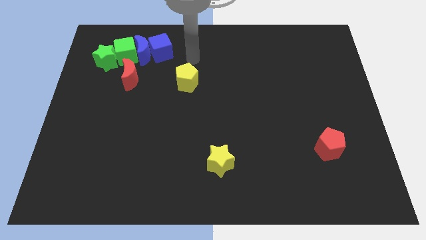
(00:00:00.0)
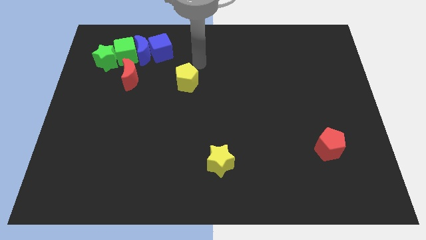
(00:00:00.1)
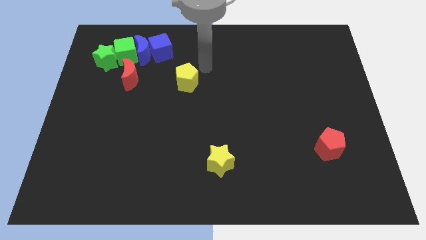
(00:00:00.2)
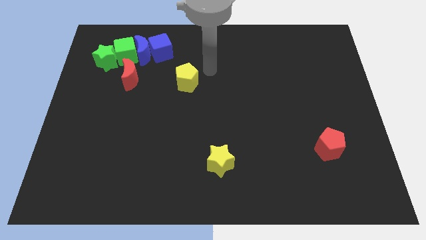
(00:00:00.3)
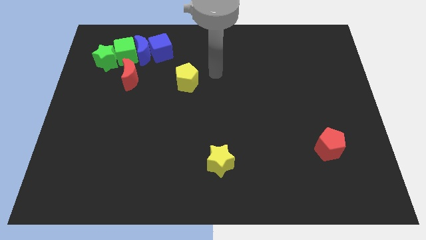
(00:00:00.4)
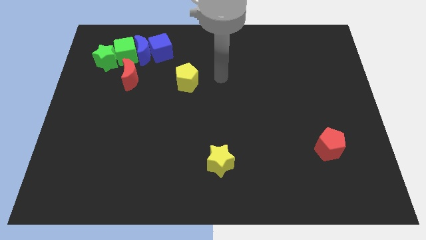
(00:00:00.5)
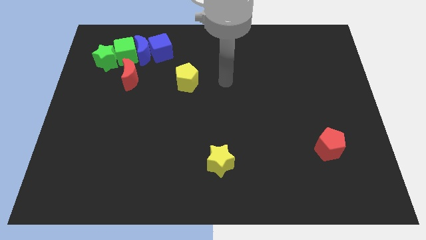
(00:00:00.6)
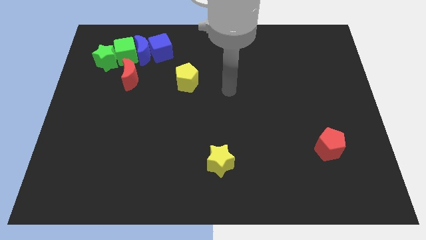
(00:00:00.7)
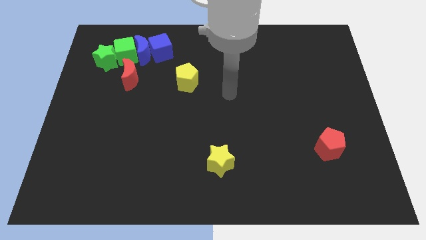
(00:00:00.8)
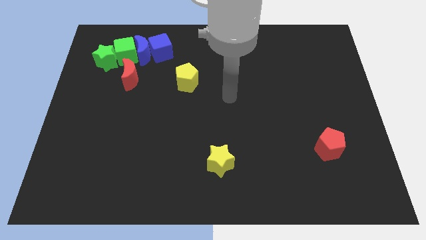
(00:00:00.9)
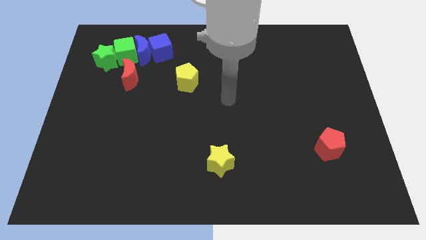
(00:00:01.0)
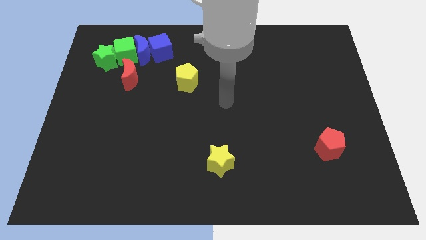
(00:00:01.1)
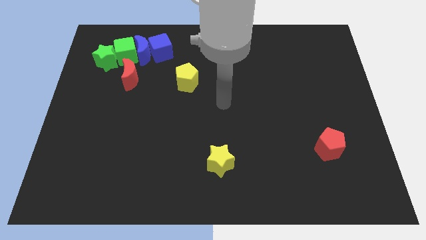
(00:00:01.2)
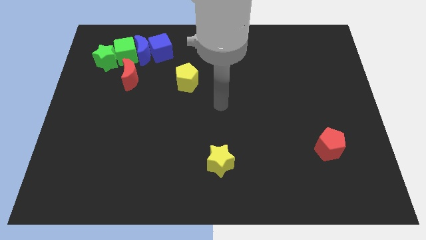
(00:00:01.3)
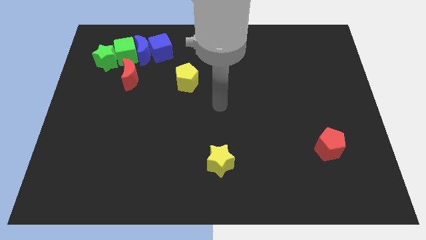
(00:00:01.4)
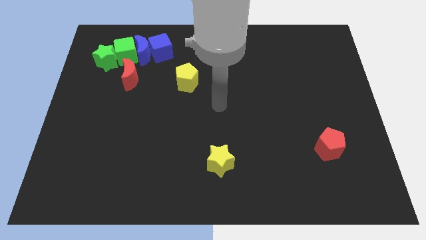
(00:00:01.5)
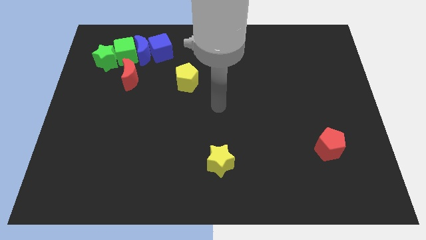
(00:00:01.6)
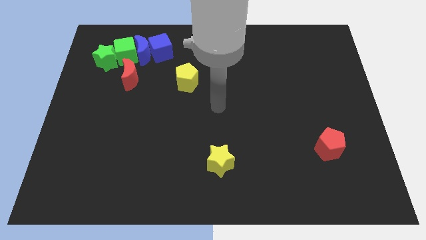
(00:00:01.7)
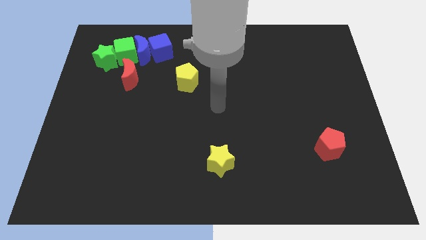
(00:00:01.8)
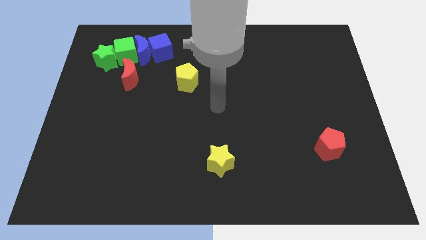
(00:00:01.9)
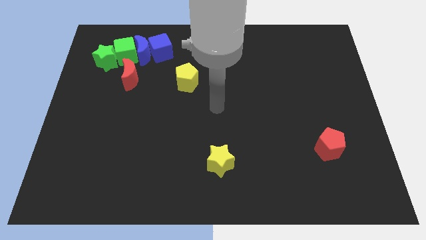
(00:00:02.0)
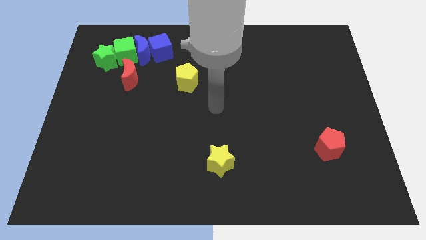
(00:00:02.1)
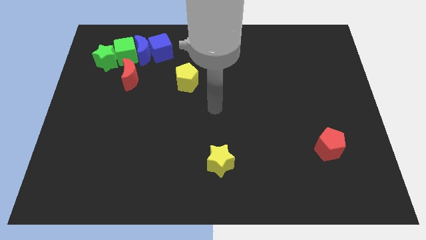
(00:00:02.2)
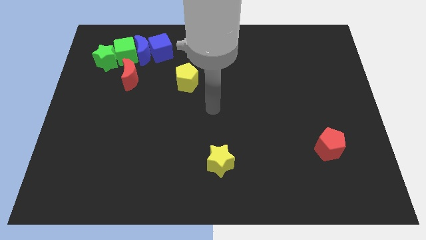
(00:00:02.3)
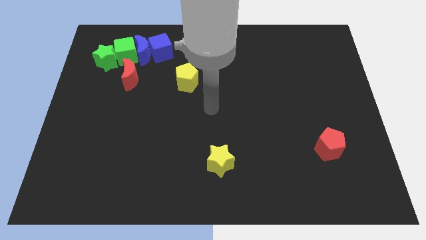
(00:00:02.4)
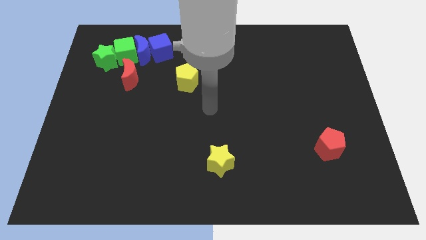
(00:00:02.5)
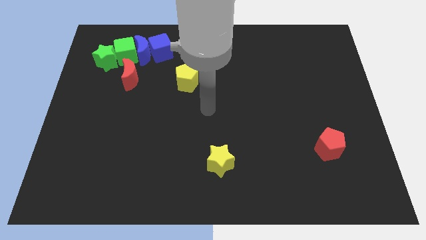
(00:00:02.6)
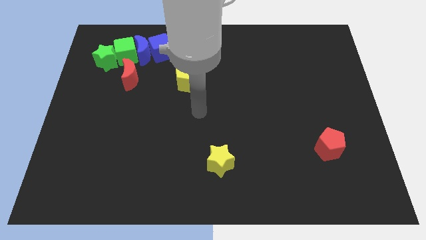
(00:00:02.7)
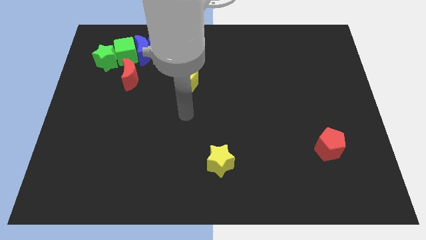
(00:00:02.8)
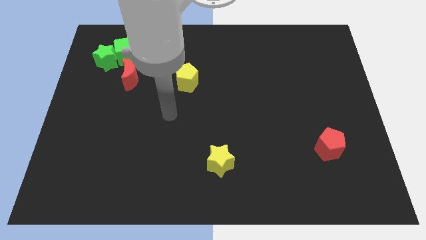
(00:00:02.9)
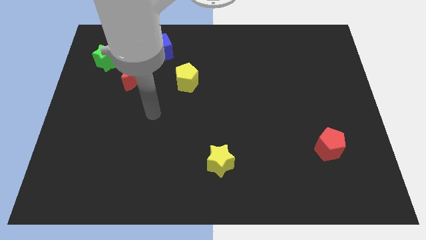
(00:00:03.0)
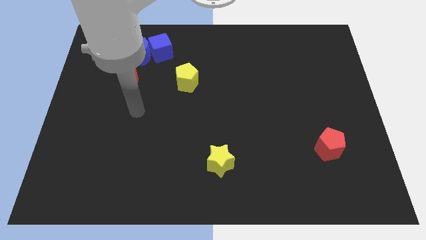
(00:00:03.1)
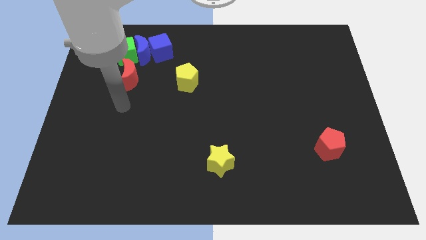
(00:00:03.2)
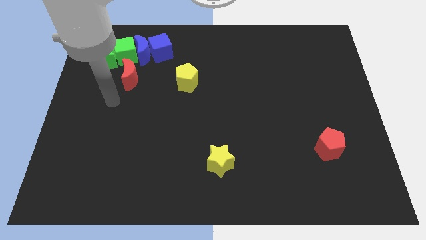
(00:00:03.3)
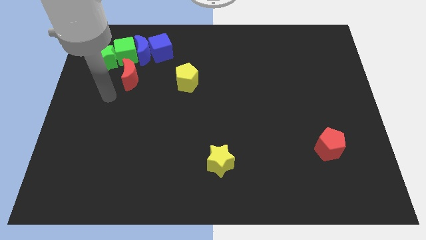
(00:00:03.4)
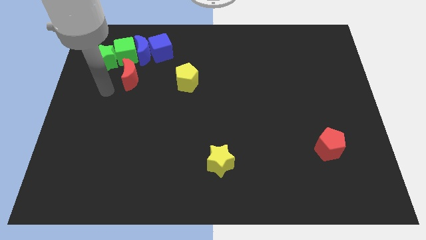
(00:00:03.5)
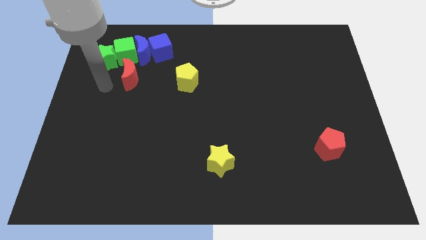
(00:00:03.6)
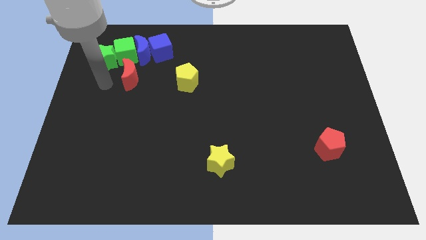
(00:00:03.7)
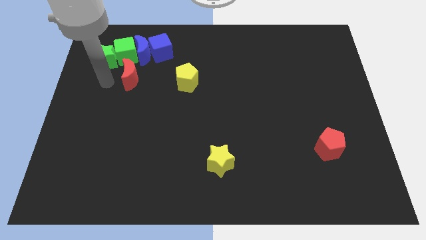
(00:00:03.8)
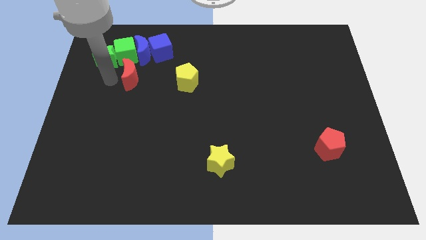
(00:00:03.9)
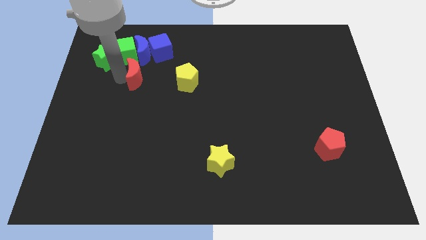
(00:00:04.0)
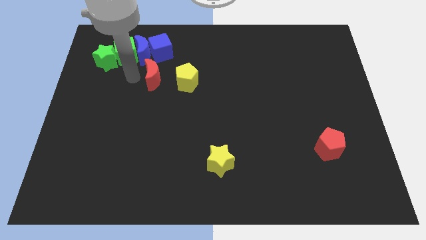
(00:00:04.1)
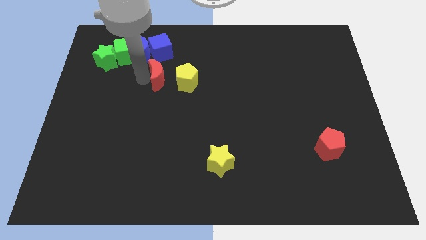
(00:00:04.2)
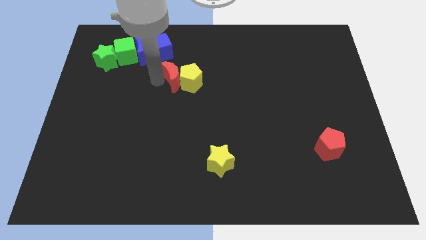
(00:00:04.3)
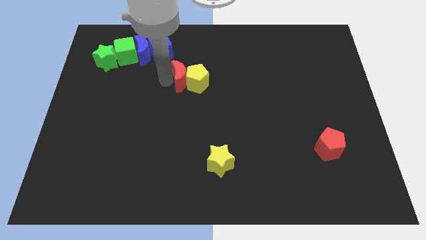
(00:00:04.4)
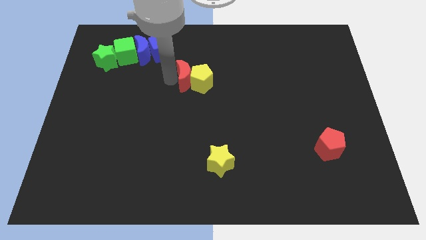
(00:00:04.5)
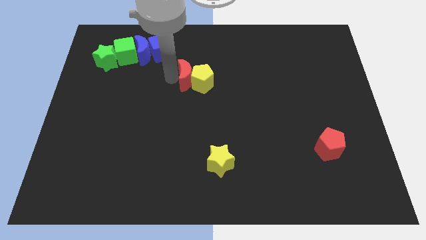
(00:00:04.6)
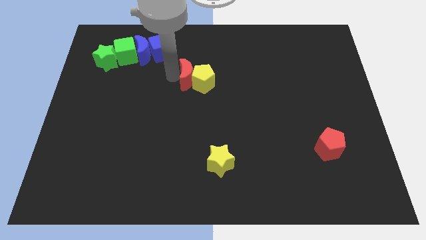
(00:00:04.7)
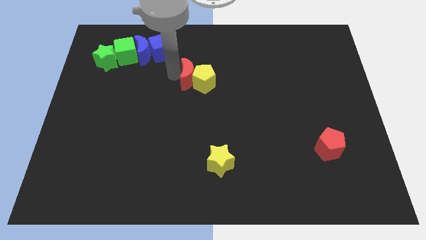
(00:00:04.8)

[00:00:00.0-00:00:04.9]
push the red crescent into the yellow pentagon

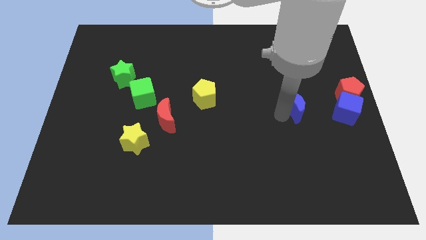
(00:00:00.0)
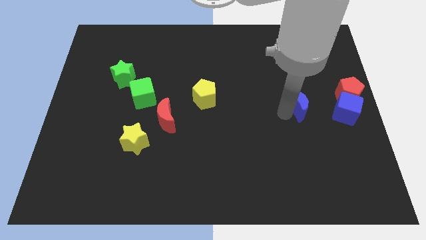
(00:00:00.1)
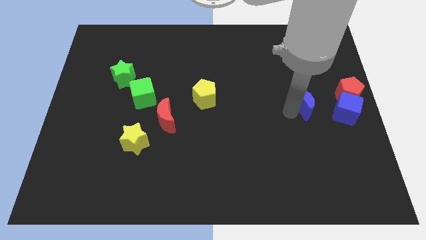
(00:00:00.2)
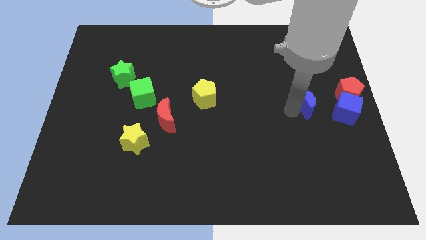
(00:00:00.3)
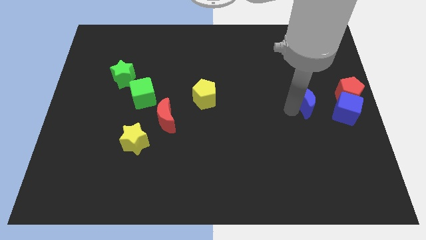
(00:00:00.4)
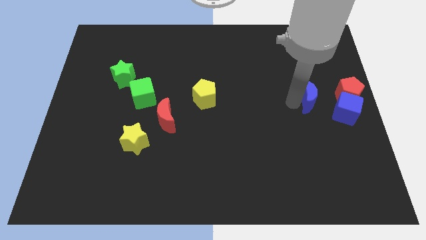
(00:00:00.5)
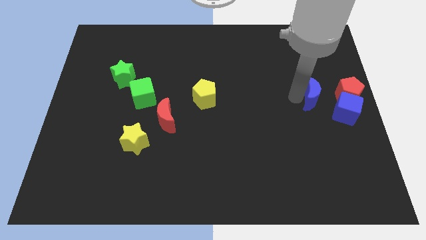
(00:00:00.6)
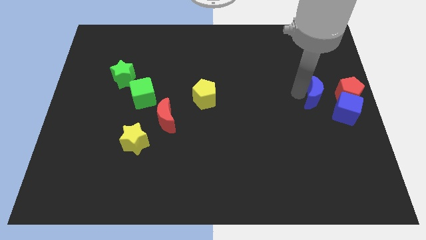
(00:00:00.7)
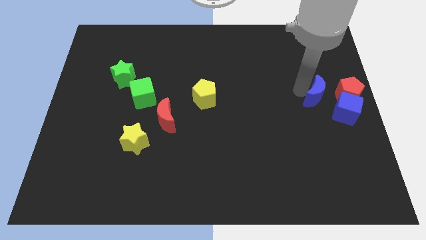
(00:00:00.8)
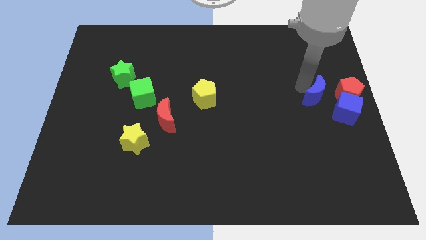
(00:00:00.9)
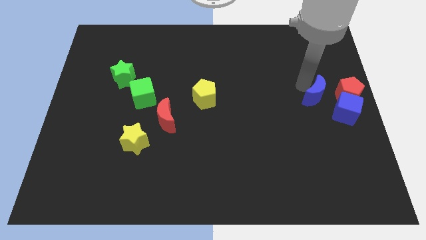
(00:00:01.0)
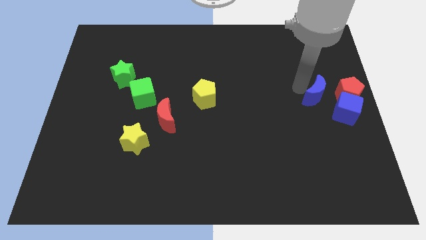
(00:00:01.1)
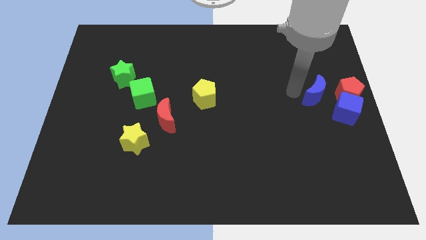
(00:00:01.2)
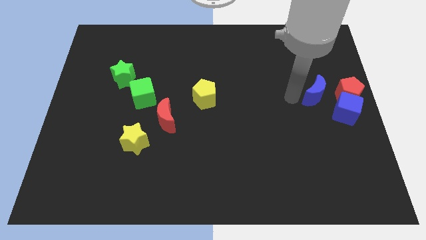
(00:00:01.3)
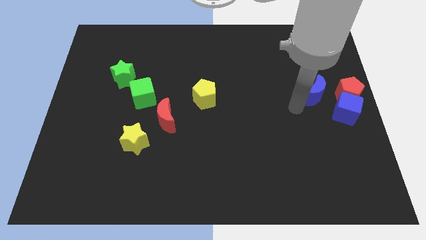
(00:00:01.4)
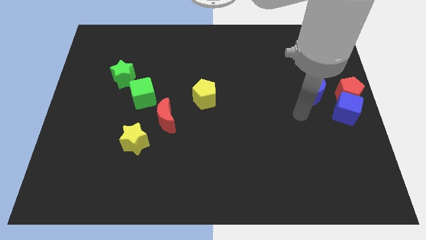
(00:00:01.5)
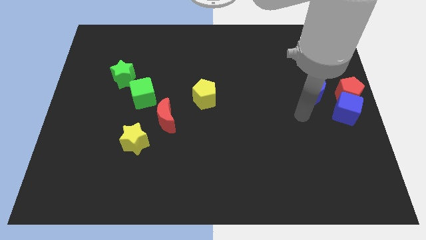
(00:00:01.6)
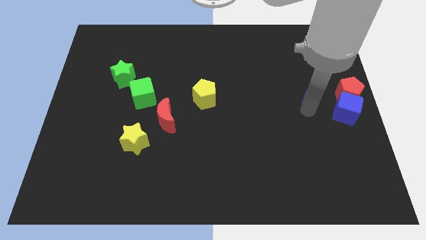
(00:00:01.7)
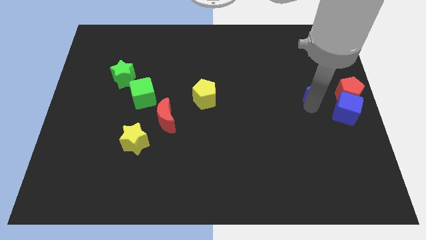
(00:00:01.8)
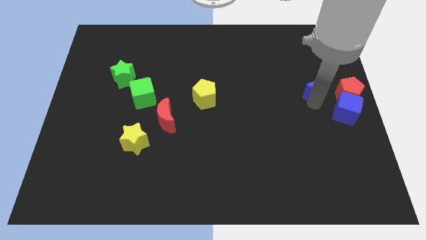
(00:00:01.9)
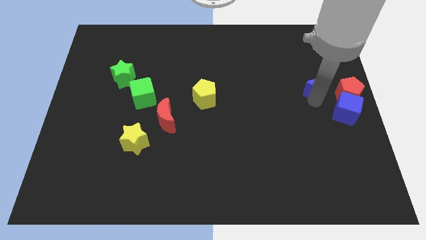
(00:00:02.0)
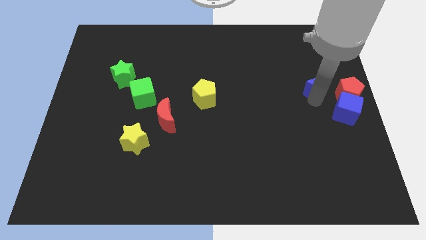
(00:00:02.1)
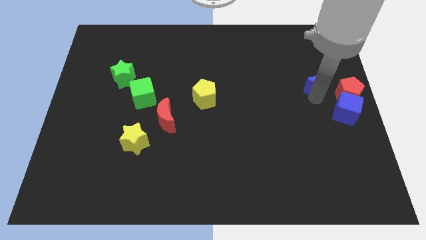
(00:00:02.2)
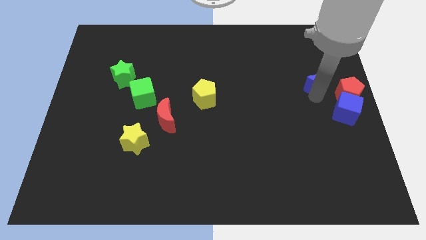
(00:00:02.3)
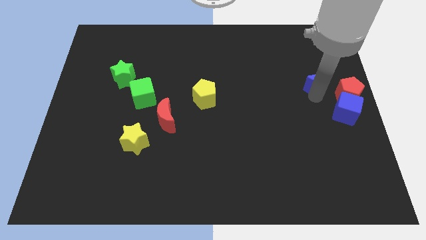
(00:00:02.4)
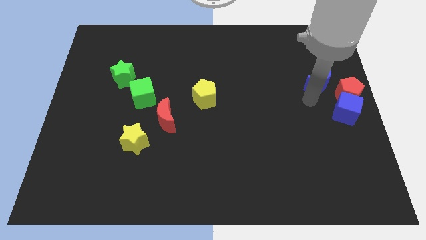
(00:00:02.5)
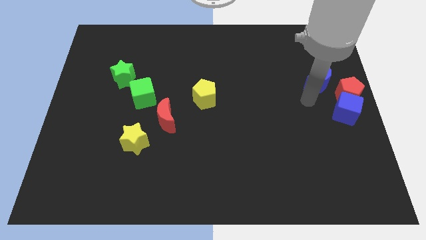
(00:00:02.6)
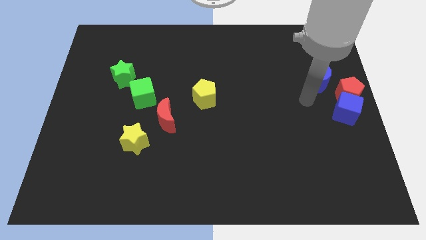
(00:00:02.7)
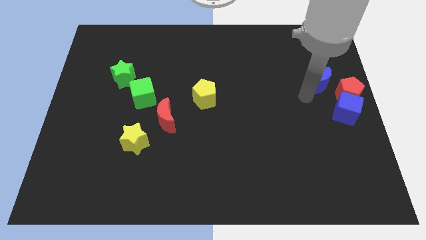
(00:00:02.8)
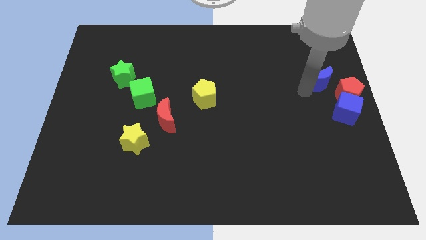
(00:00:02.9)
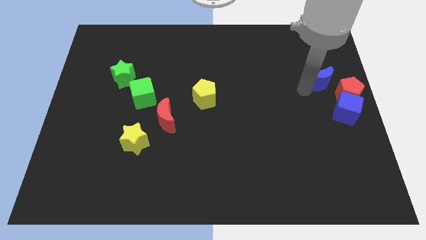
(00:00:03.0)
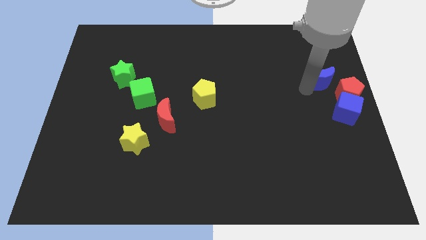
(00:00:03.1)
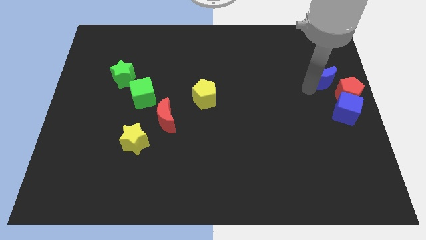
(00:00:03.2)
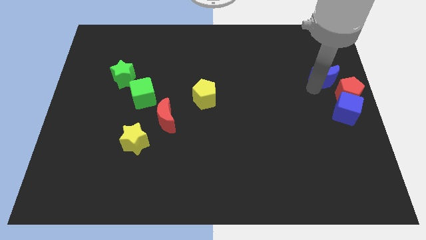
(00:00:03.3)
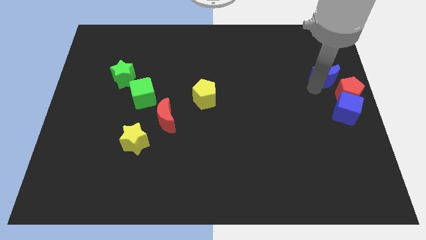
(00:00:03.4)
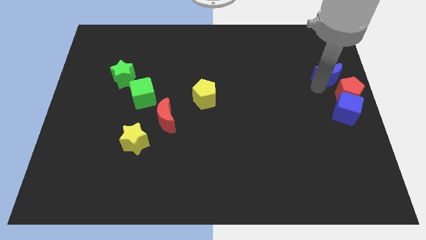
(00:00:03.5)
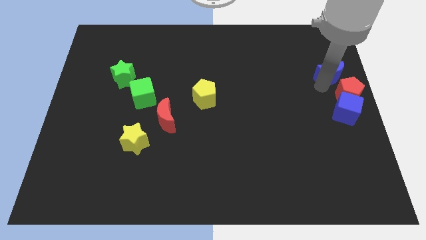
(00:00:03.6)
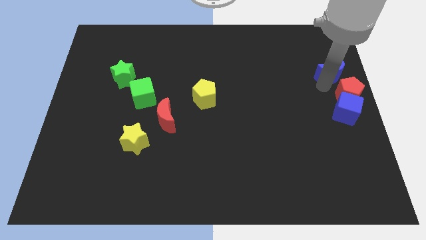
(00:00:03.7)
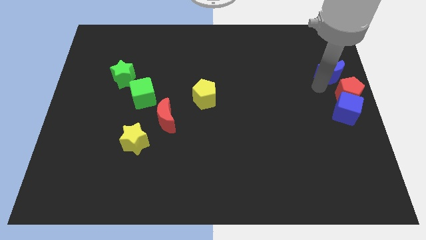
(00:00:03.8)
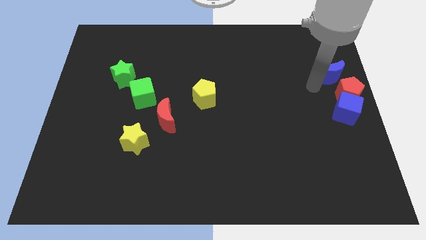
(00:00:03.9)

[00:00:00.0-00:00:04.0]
slide the blue crescent above the red pentagon

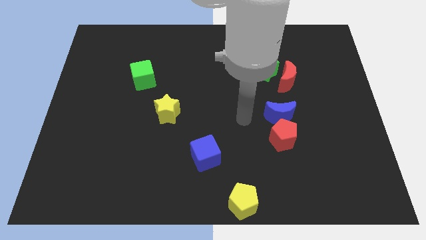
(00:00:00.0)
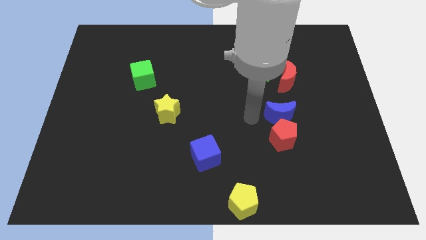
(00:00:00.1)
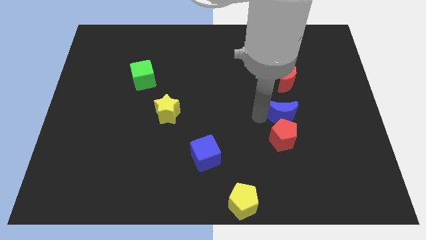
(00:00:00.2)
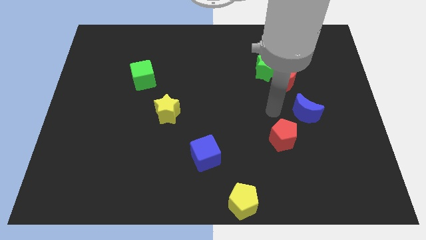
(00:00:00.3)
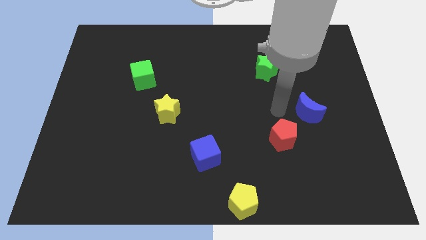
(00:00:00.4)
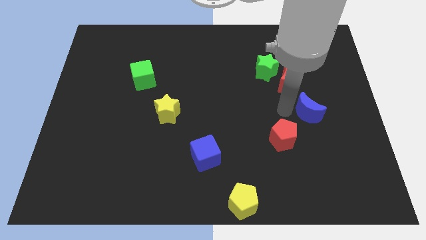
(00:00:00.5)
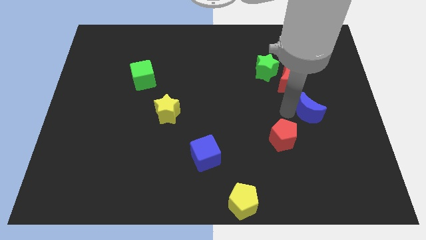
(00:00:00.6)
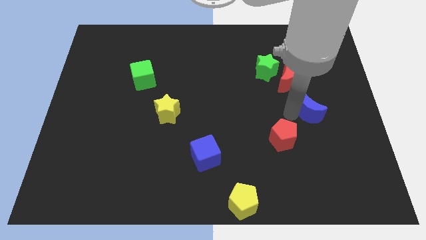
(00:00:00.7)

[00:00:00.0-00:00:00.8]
push the blue crescent away from the red pentagon
